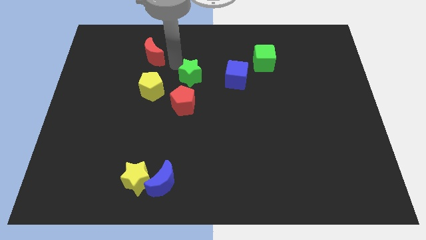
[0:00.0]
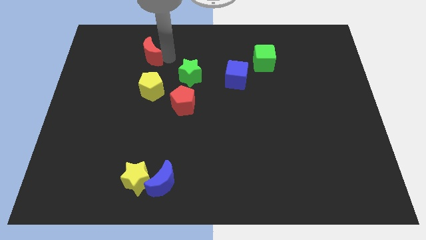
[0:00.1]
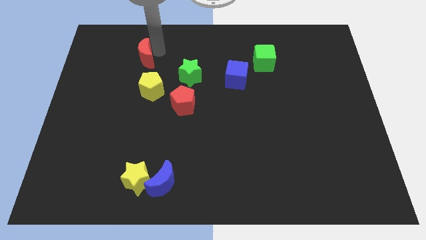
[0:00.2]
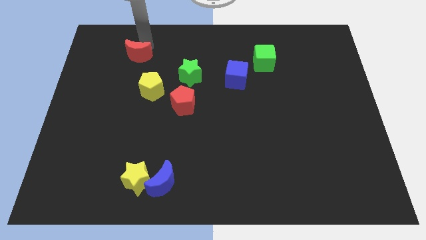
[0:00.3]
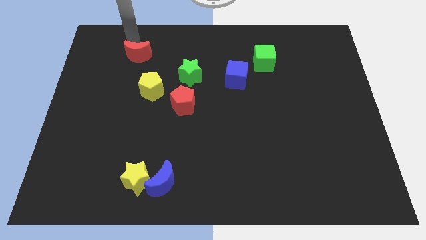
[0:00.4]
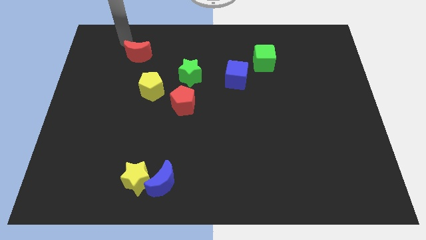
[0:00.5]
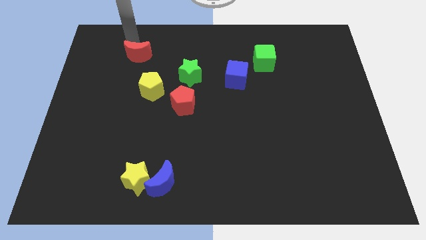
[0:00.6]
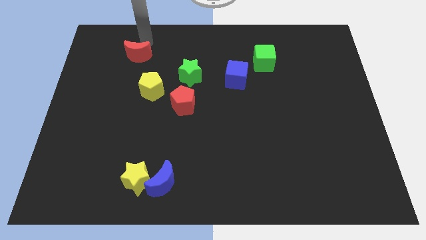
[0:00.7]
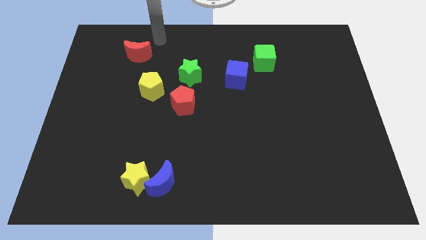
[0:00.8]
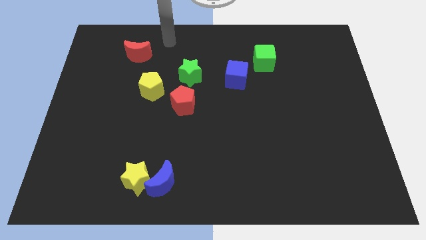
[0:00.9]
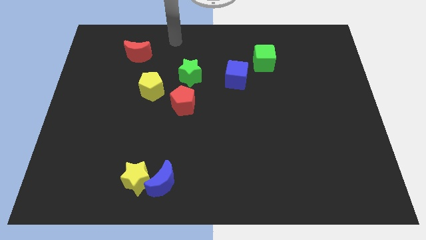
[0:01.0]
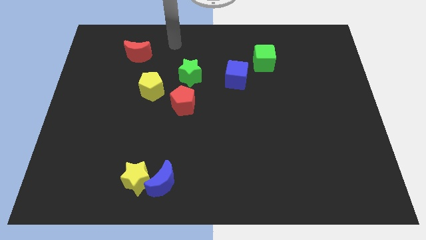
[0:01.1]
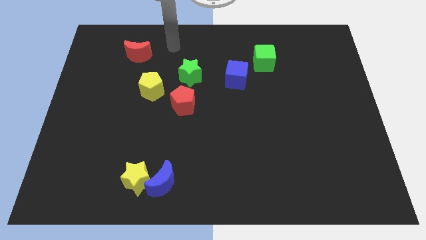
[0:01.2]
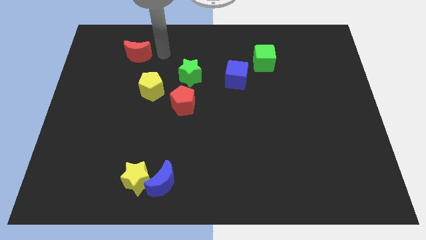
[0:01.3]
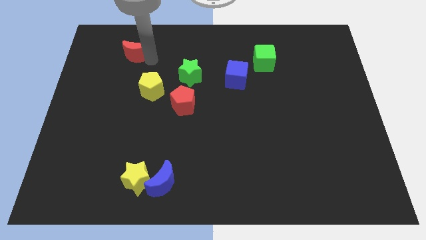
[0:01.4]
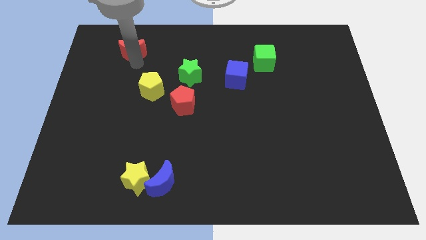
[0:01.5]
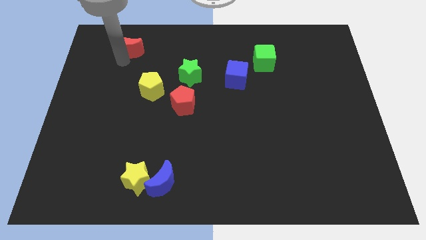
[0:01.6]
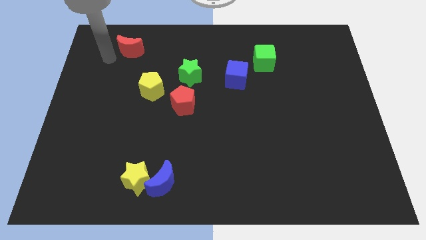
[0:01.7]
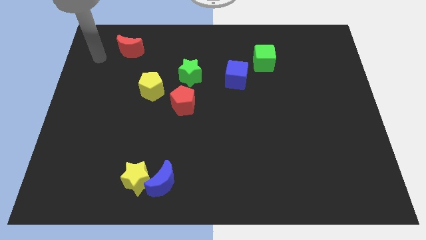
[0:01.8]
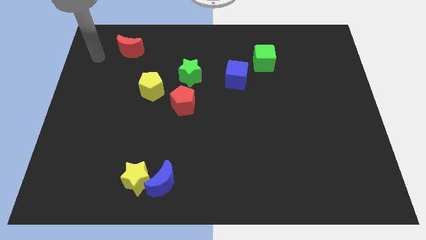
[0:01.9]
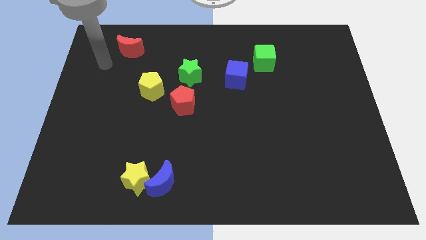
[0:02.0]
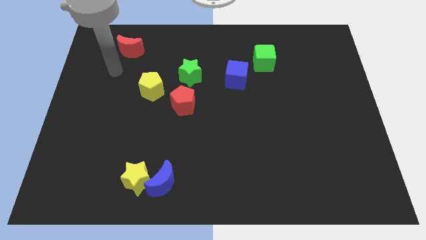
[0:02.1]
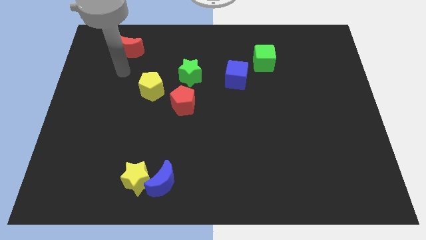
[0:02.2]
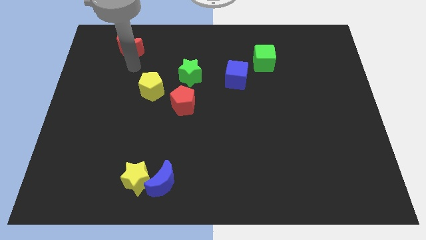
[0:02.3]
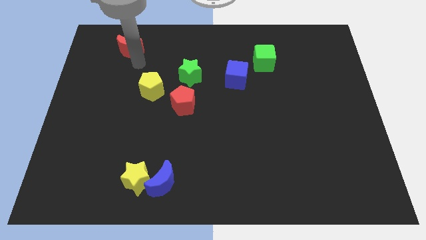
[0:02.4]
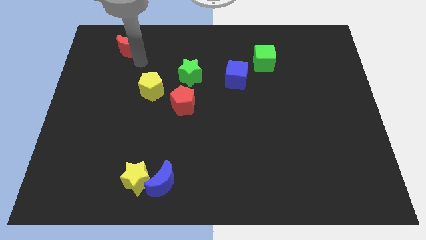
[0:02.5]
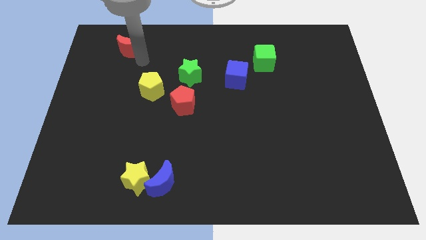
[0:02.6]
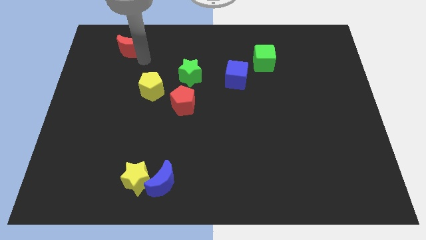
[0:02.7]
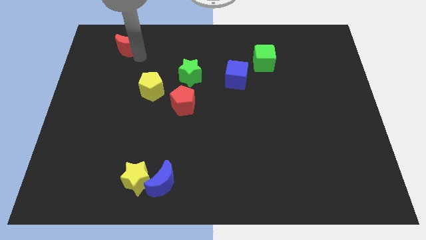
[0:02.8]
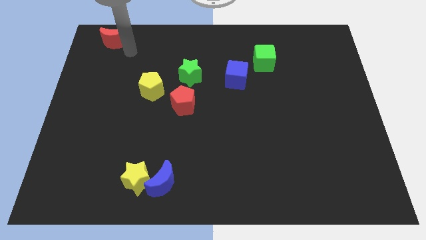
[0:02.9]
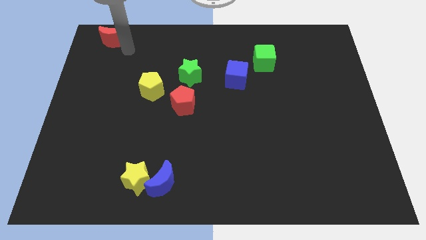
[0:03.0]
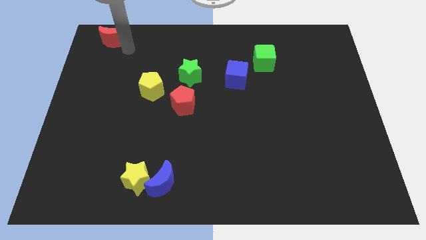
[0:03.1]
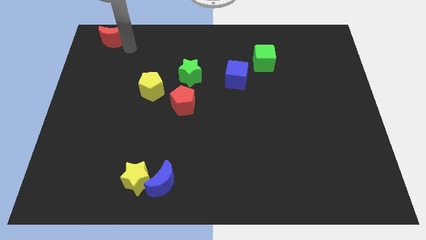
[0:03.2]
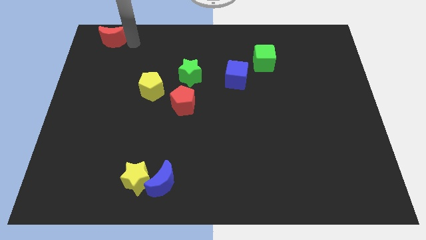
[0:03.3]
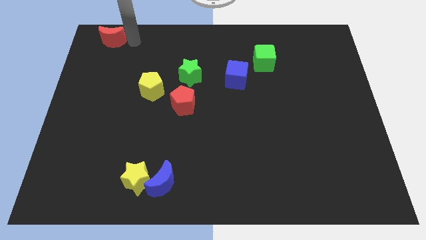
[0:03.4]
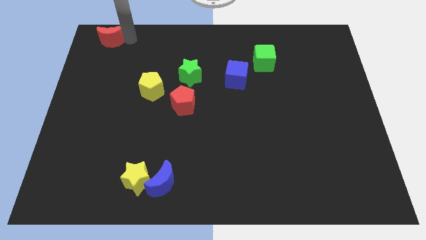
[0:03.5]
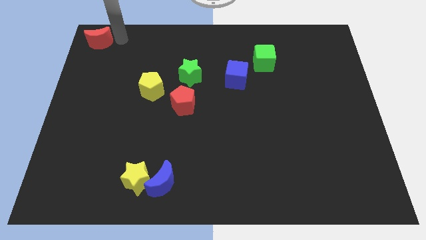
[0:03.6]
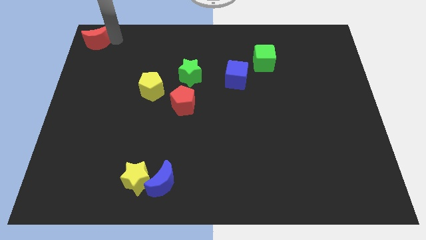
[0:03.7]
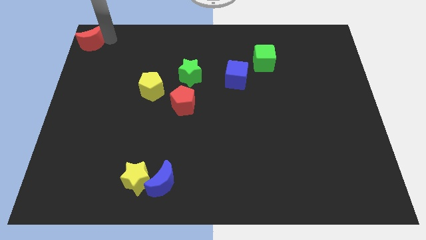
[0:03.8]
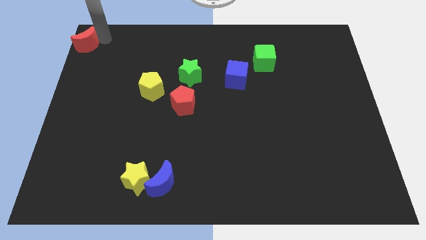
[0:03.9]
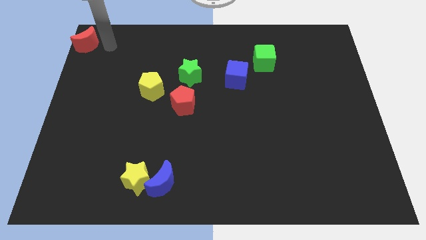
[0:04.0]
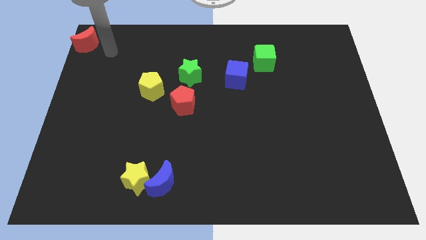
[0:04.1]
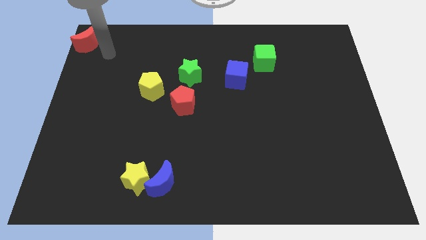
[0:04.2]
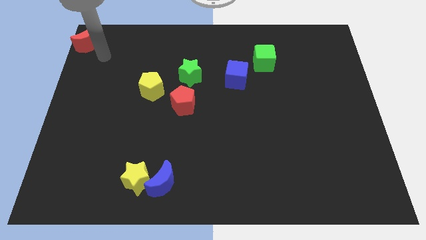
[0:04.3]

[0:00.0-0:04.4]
move the red moon to the top left corner

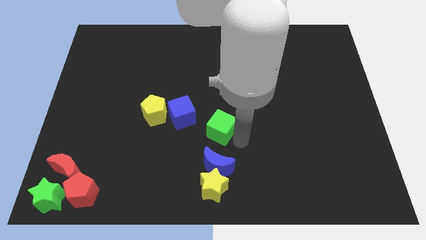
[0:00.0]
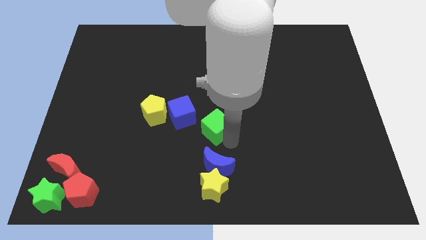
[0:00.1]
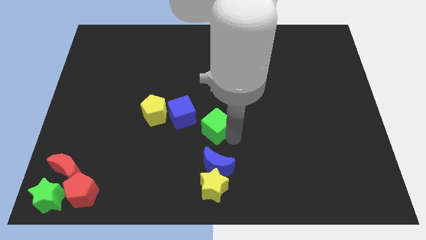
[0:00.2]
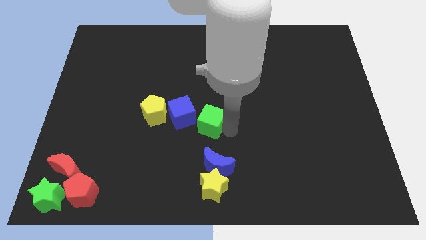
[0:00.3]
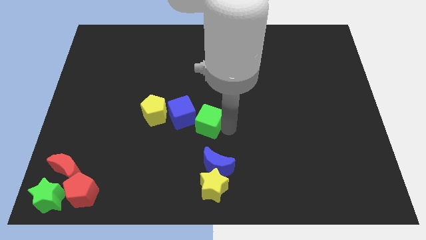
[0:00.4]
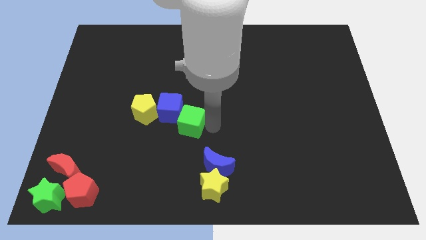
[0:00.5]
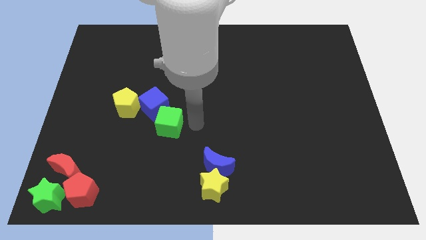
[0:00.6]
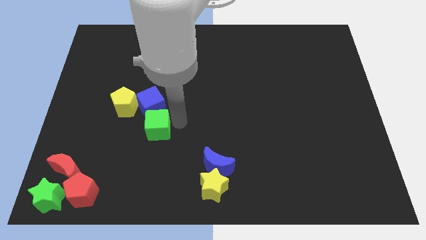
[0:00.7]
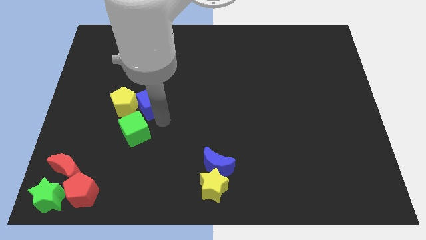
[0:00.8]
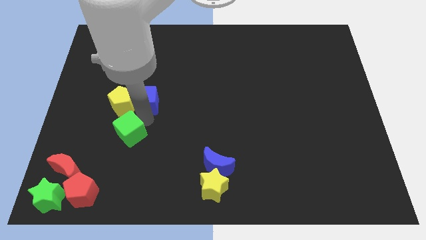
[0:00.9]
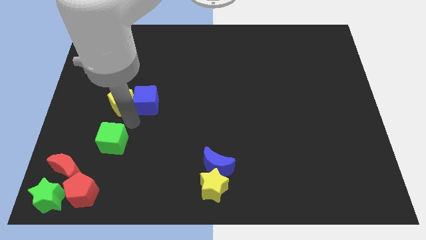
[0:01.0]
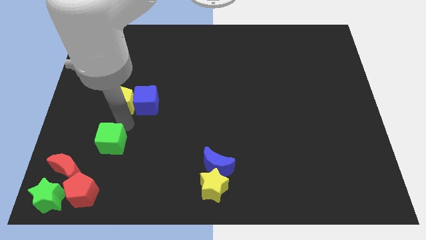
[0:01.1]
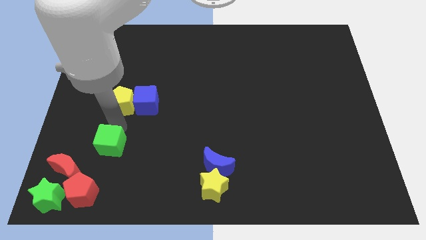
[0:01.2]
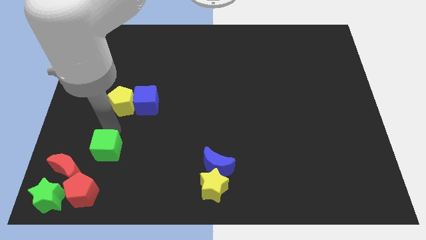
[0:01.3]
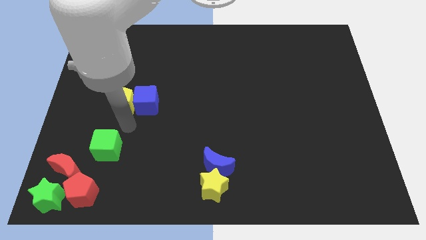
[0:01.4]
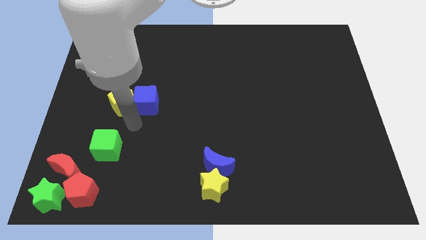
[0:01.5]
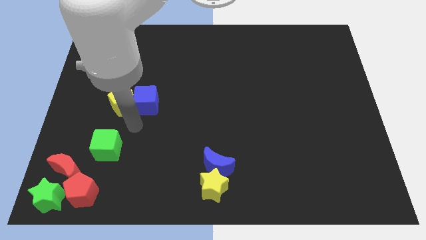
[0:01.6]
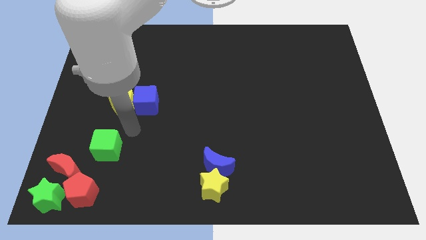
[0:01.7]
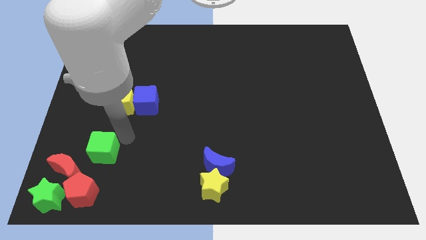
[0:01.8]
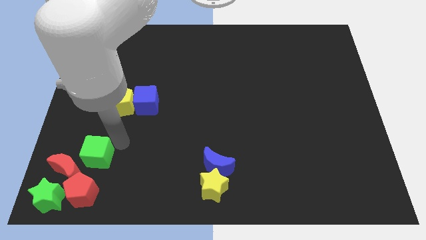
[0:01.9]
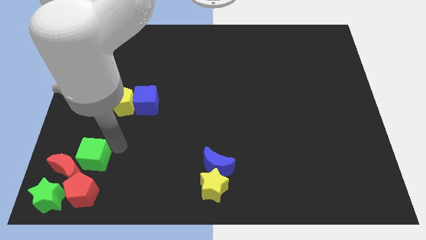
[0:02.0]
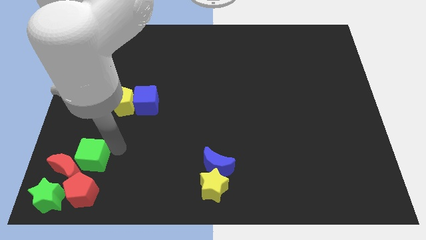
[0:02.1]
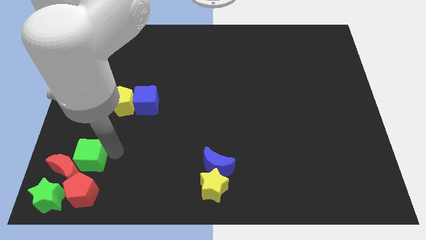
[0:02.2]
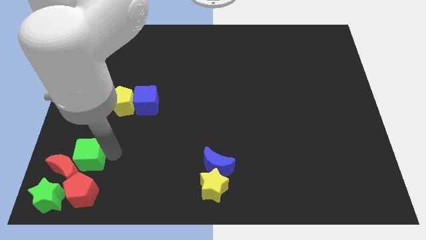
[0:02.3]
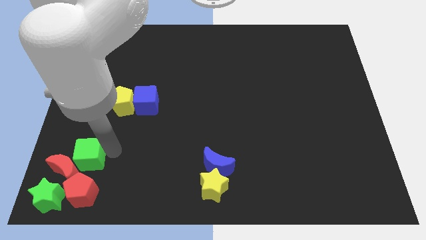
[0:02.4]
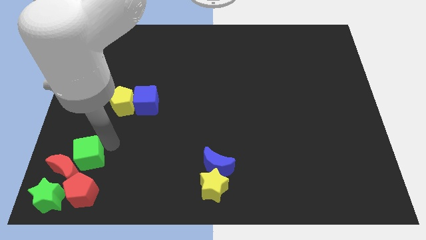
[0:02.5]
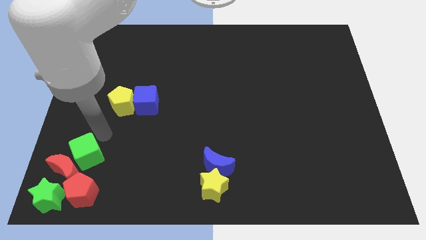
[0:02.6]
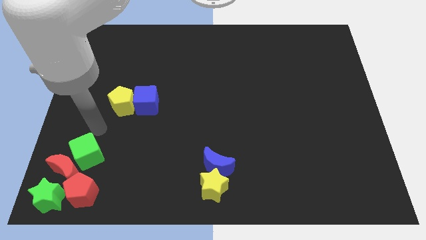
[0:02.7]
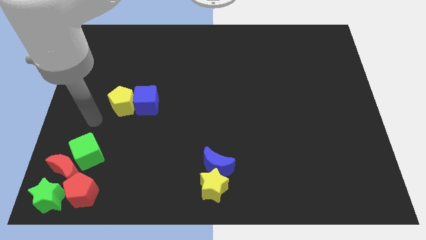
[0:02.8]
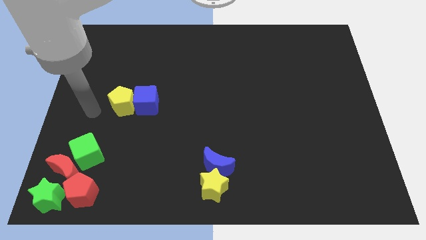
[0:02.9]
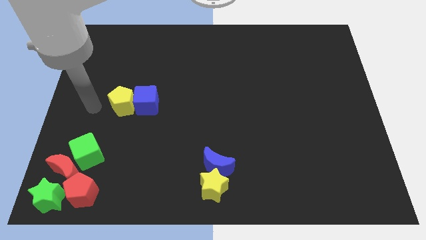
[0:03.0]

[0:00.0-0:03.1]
move the green cube into red moon

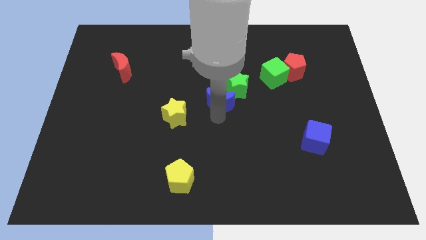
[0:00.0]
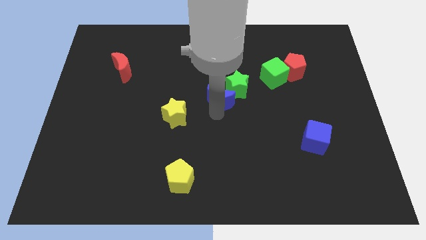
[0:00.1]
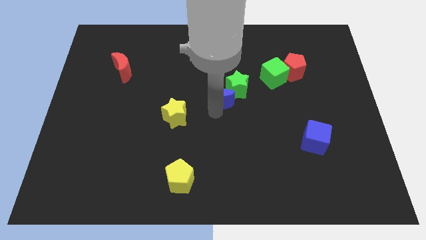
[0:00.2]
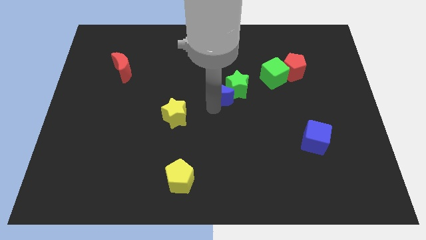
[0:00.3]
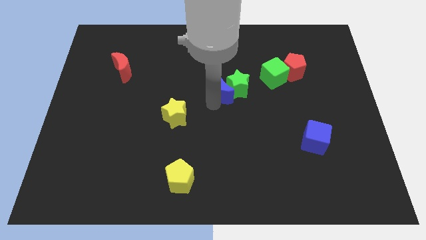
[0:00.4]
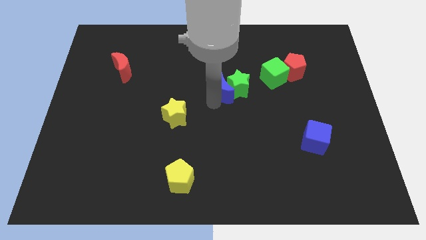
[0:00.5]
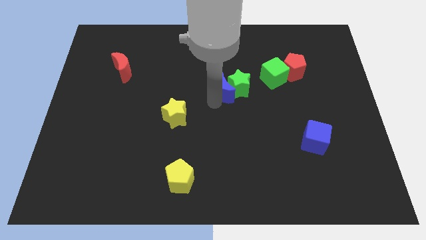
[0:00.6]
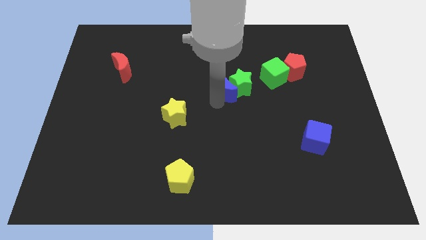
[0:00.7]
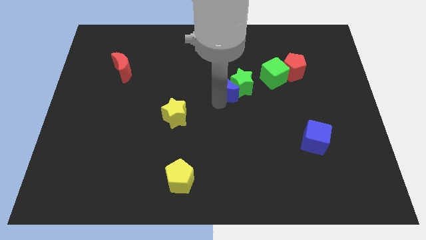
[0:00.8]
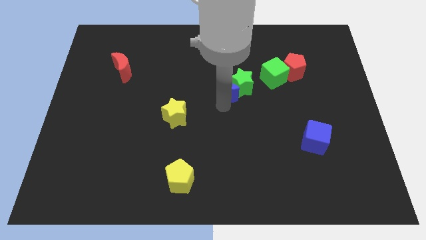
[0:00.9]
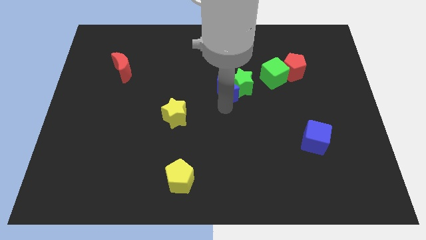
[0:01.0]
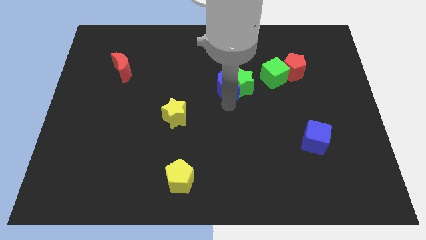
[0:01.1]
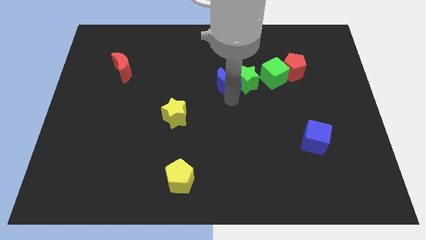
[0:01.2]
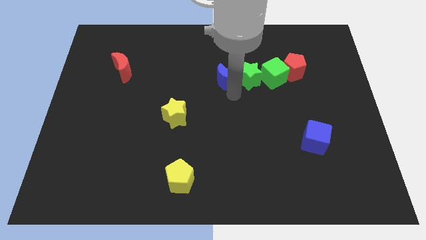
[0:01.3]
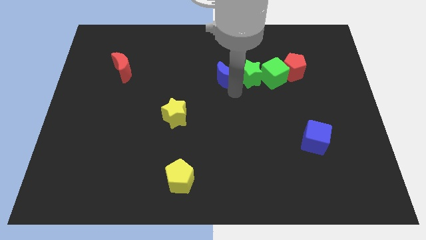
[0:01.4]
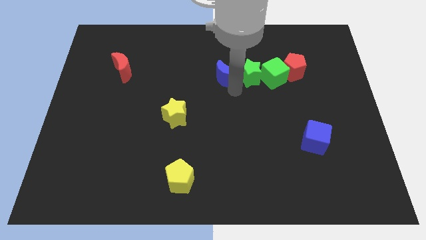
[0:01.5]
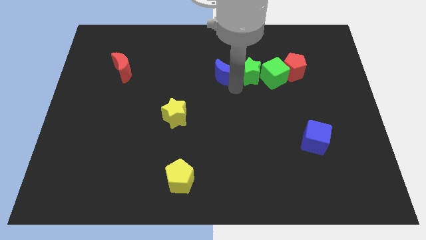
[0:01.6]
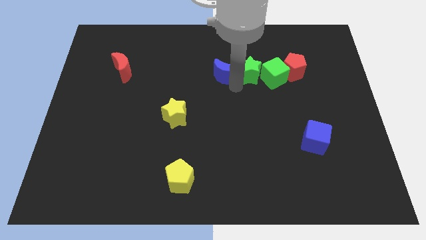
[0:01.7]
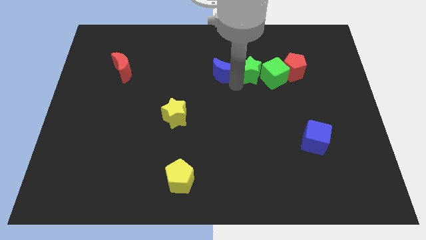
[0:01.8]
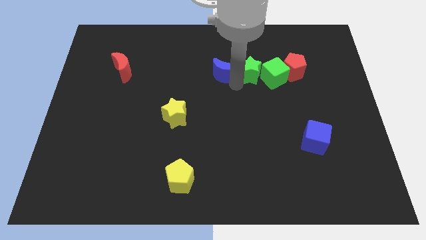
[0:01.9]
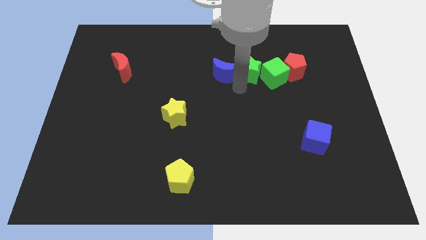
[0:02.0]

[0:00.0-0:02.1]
push the green star with the blue moon
